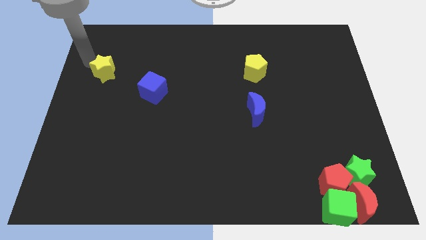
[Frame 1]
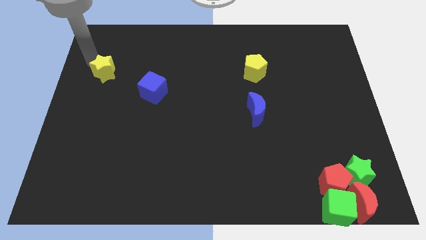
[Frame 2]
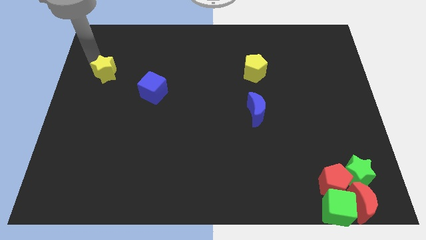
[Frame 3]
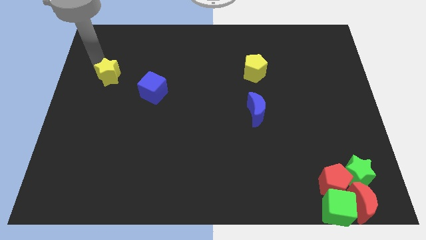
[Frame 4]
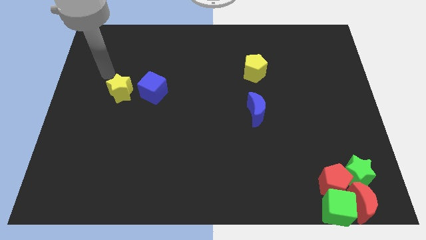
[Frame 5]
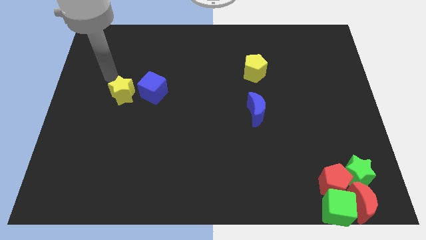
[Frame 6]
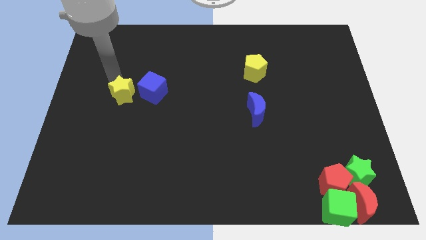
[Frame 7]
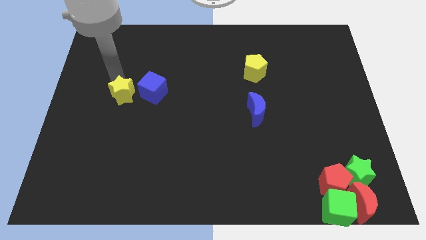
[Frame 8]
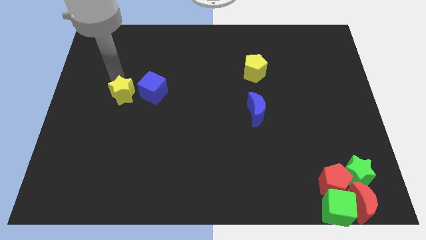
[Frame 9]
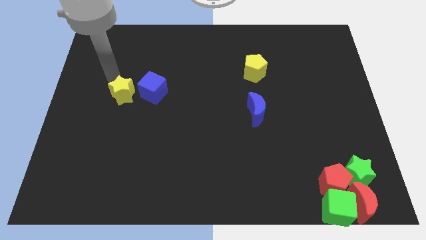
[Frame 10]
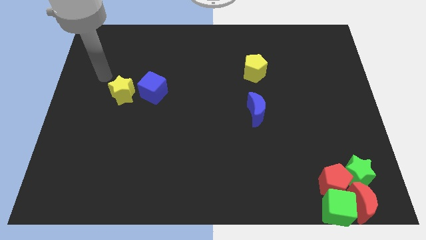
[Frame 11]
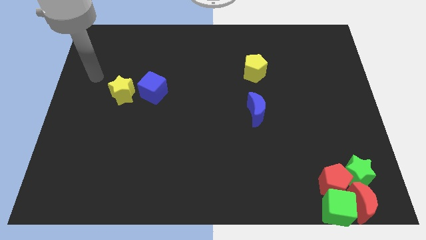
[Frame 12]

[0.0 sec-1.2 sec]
place the yellow star to the left of the blue cube

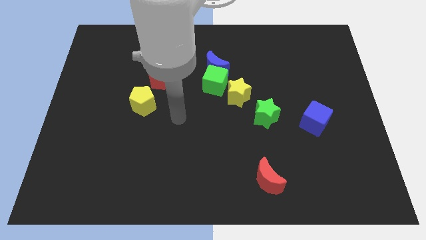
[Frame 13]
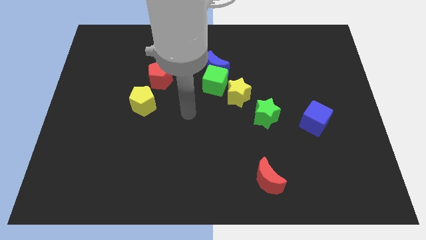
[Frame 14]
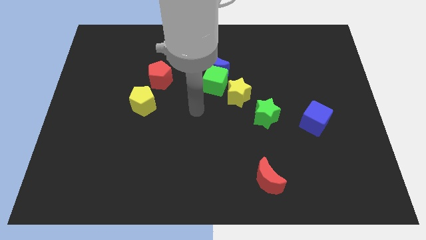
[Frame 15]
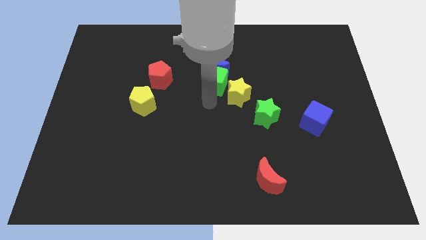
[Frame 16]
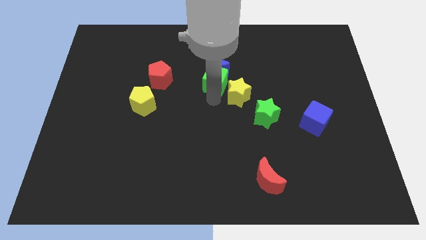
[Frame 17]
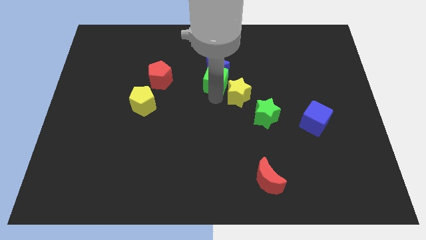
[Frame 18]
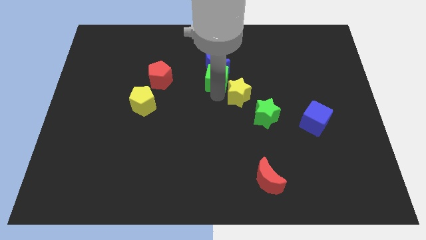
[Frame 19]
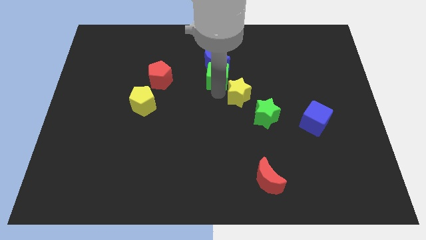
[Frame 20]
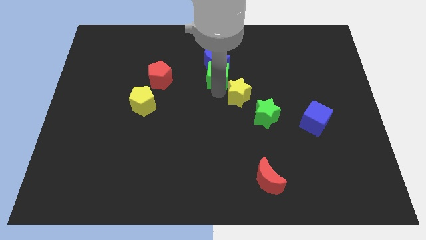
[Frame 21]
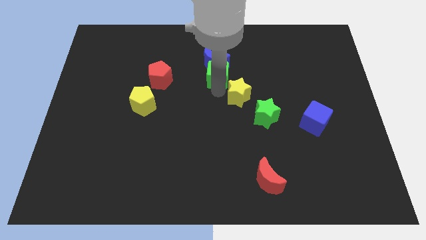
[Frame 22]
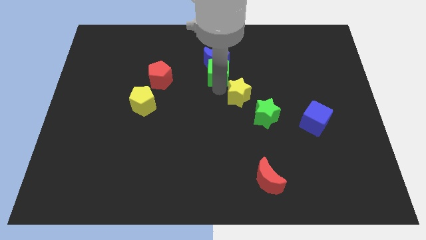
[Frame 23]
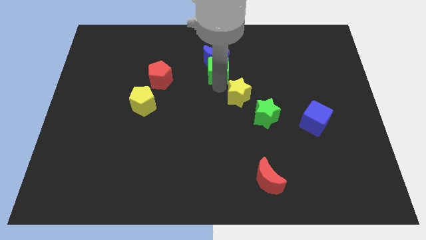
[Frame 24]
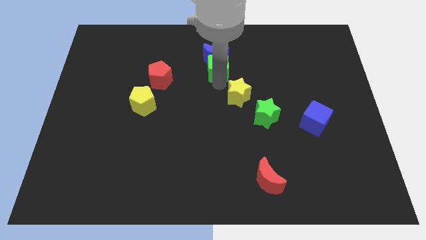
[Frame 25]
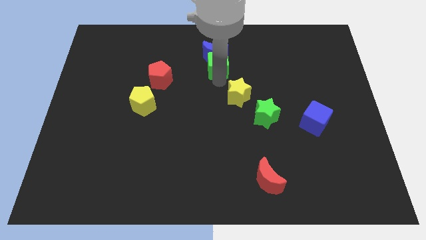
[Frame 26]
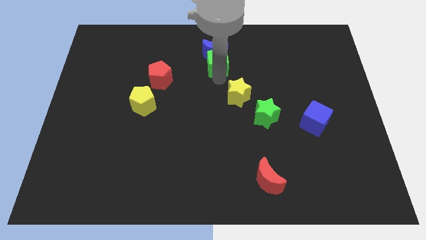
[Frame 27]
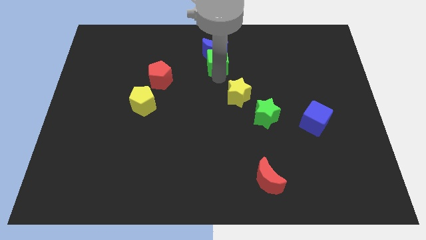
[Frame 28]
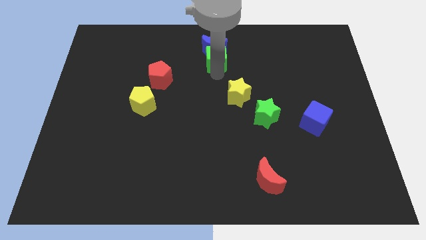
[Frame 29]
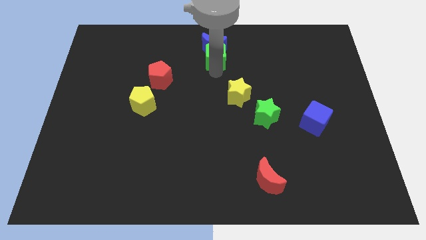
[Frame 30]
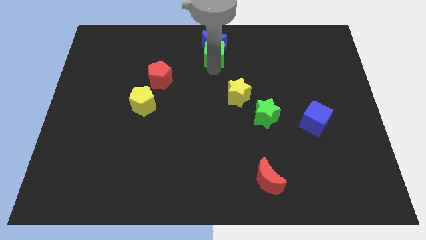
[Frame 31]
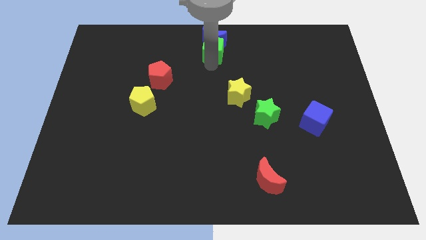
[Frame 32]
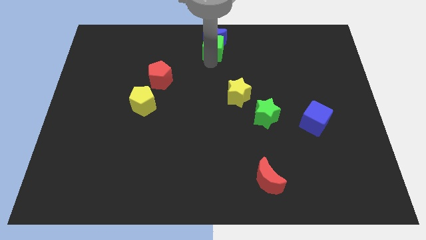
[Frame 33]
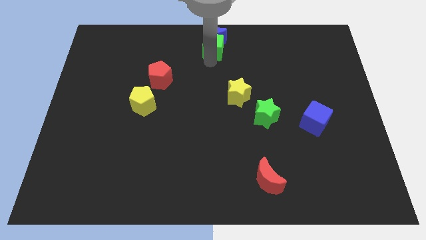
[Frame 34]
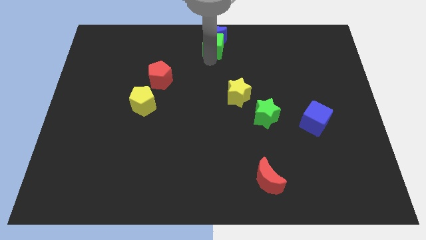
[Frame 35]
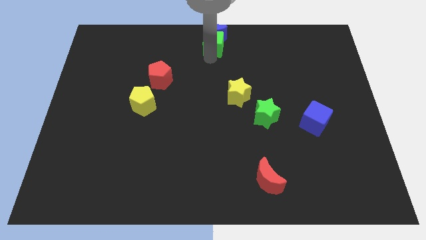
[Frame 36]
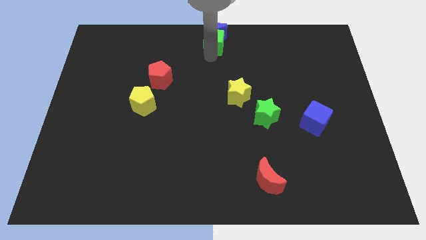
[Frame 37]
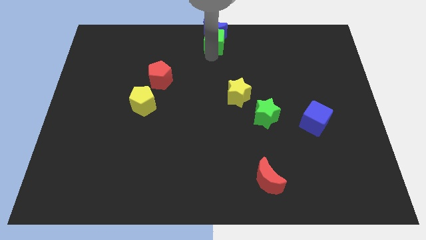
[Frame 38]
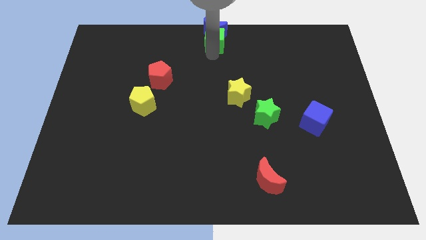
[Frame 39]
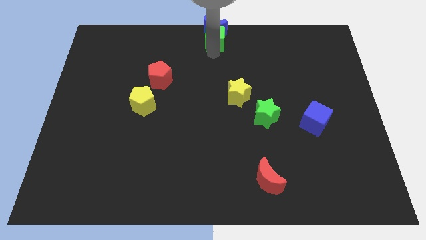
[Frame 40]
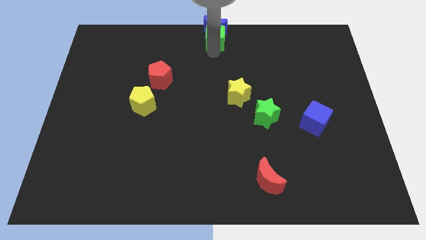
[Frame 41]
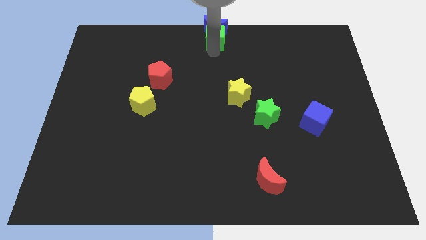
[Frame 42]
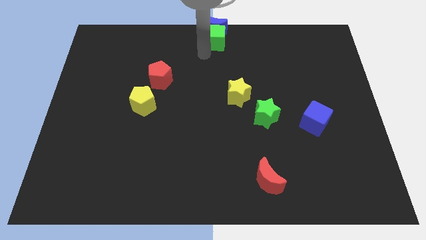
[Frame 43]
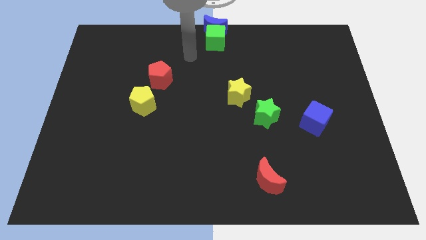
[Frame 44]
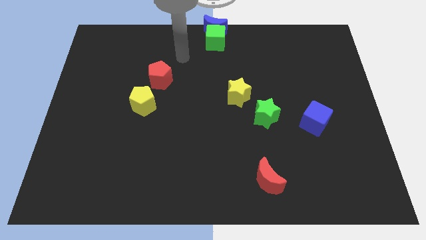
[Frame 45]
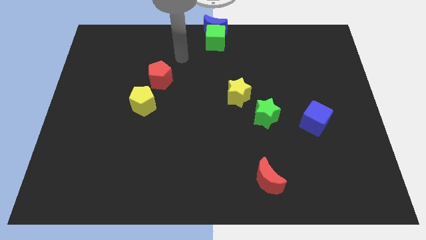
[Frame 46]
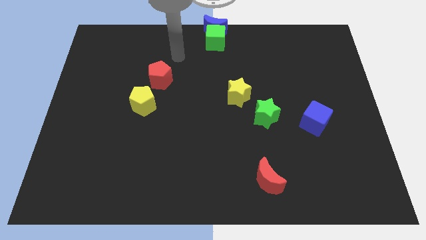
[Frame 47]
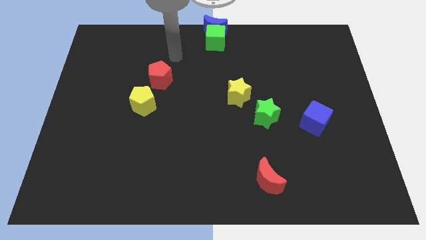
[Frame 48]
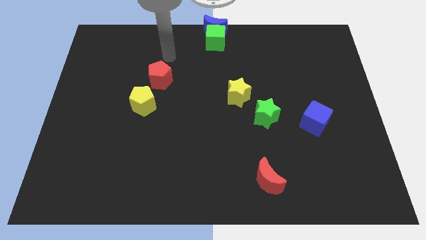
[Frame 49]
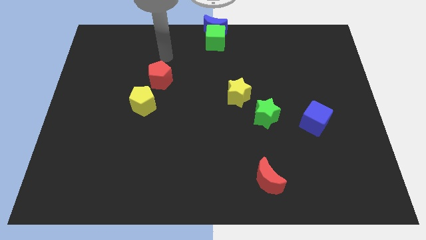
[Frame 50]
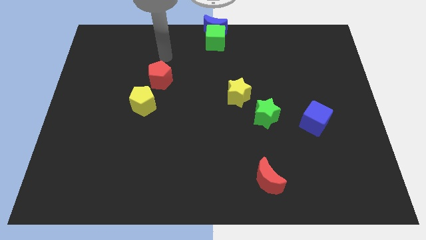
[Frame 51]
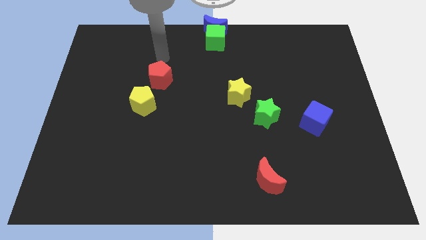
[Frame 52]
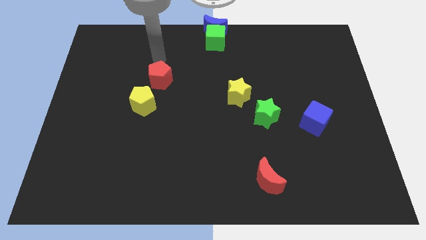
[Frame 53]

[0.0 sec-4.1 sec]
slide green cube along with blue moon to the top center

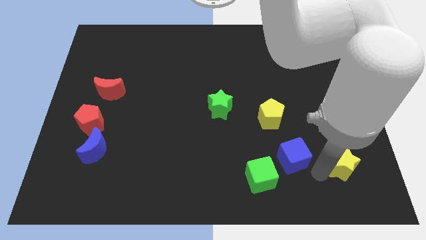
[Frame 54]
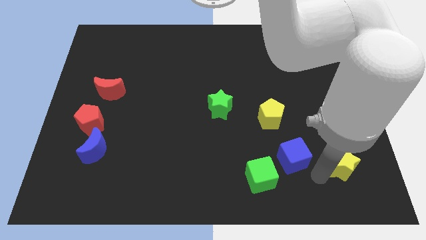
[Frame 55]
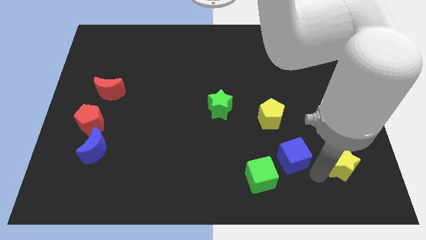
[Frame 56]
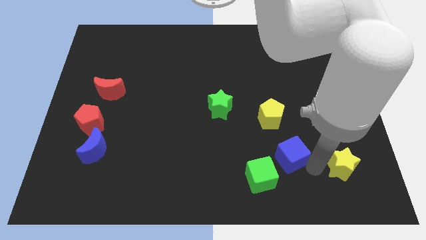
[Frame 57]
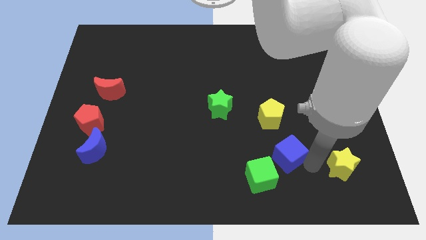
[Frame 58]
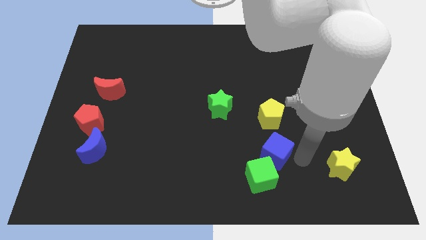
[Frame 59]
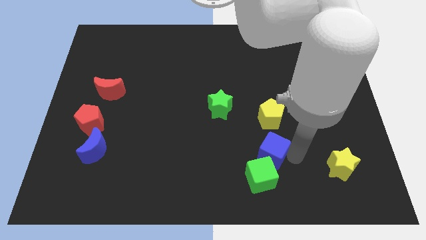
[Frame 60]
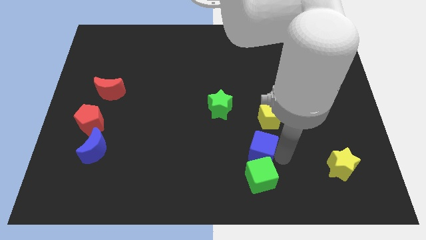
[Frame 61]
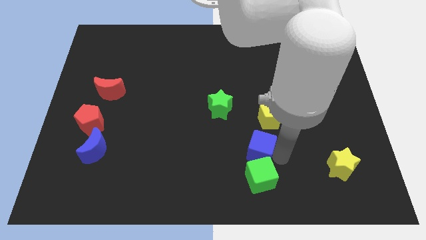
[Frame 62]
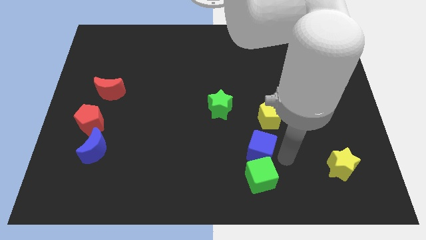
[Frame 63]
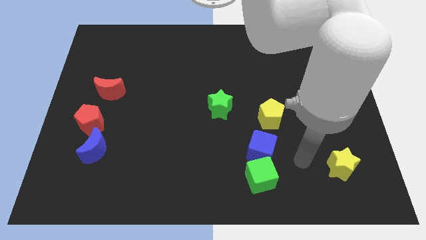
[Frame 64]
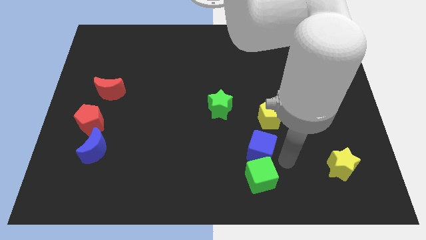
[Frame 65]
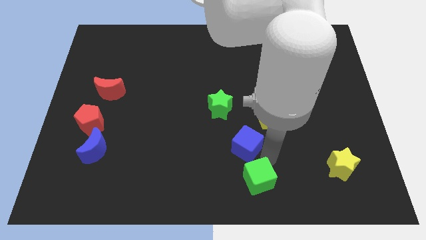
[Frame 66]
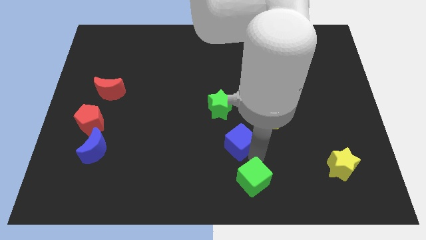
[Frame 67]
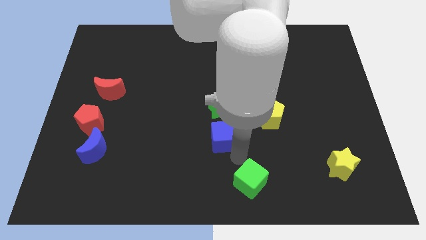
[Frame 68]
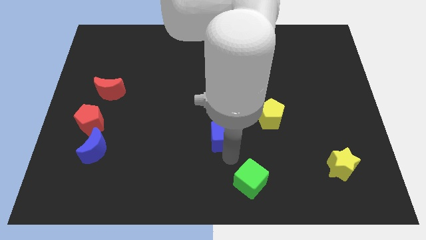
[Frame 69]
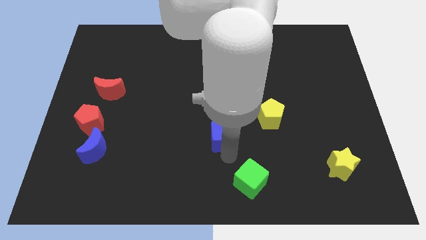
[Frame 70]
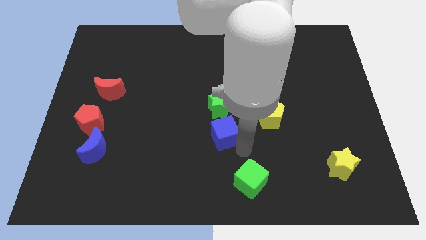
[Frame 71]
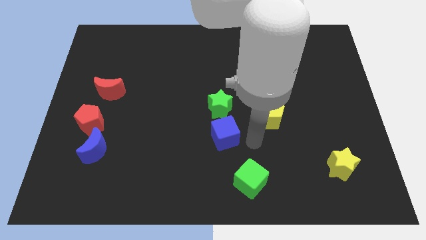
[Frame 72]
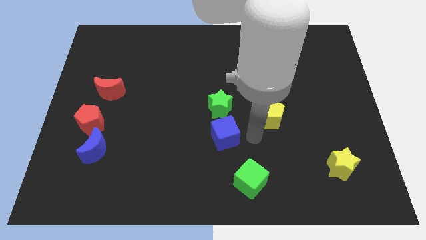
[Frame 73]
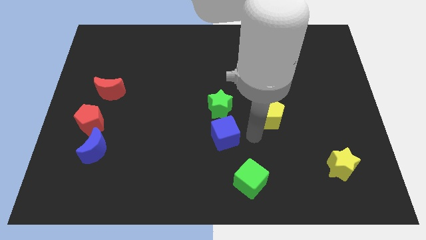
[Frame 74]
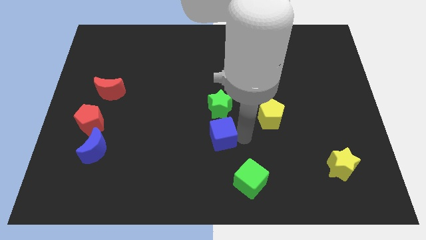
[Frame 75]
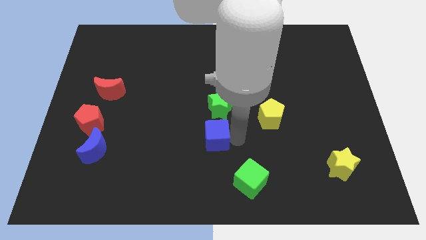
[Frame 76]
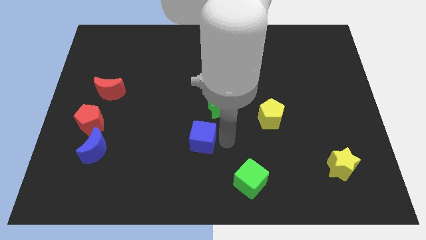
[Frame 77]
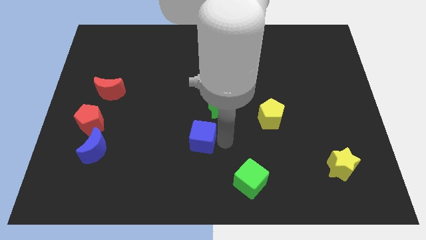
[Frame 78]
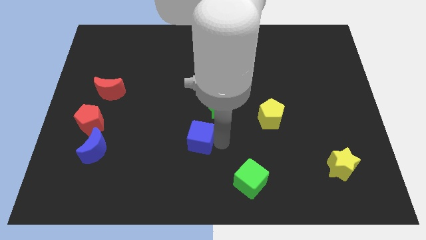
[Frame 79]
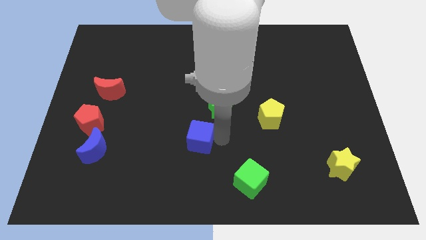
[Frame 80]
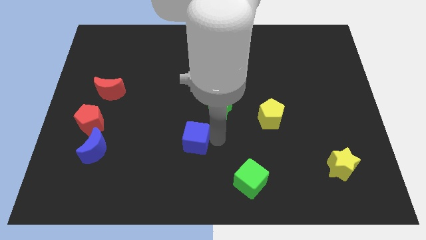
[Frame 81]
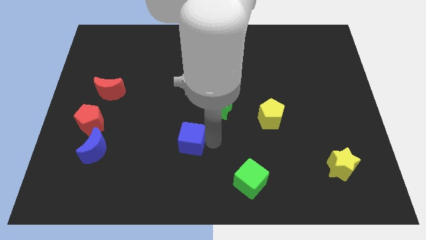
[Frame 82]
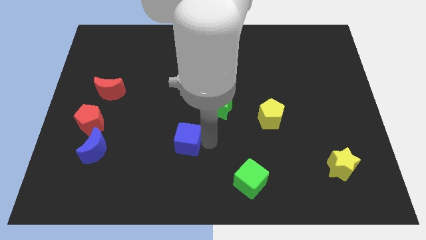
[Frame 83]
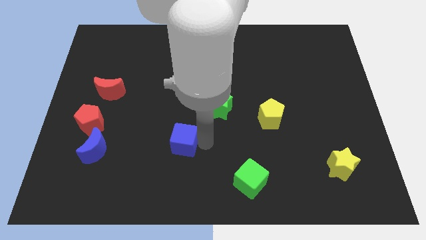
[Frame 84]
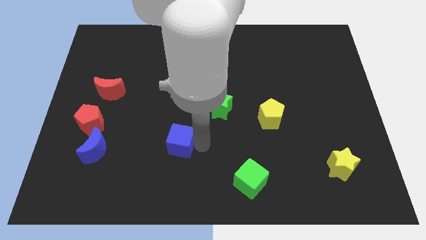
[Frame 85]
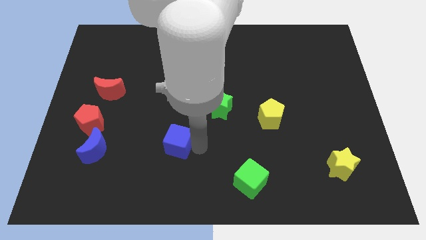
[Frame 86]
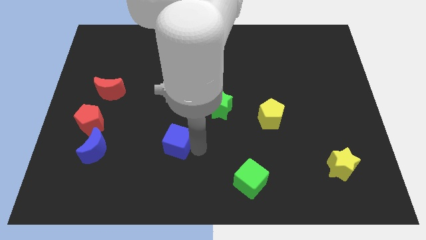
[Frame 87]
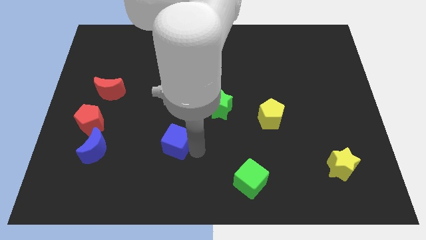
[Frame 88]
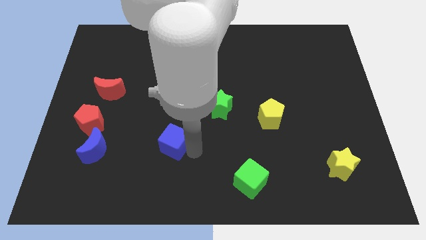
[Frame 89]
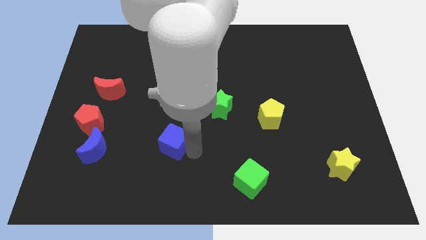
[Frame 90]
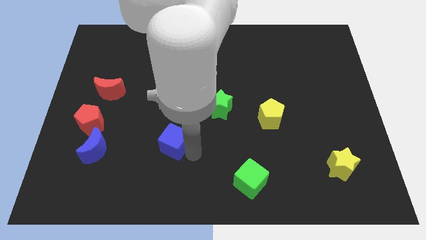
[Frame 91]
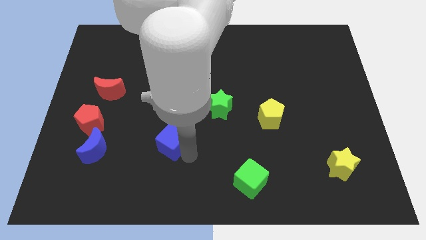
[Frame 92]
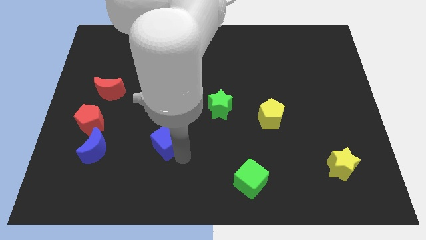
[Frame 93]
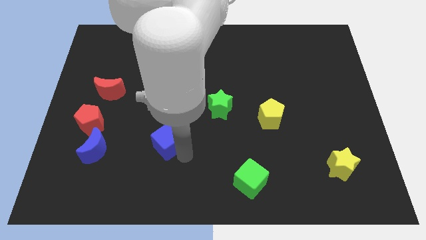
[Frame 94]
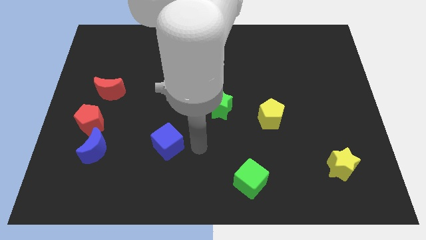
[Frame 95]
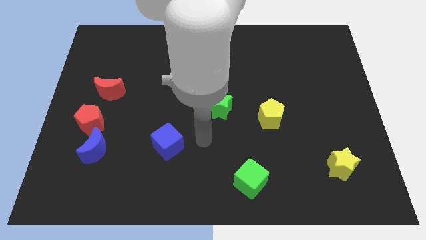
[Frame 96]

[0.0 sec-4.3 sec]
move the blue cube diagonally to the left of the green star
